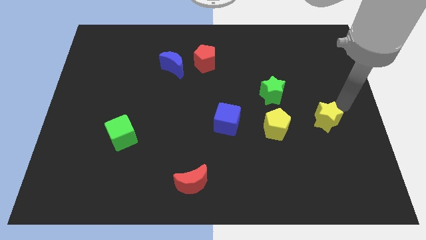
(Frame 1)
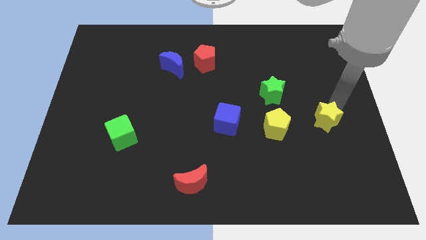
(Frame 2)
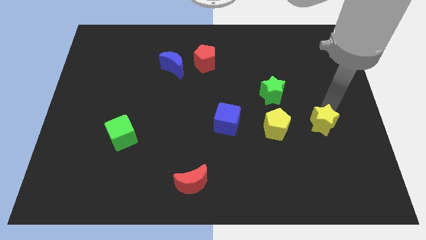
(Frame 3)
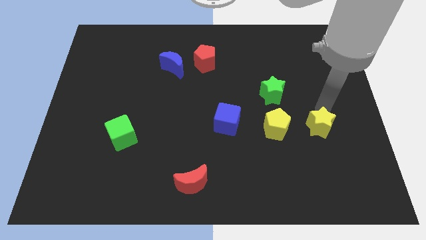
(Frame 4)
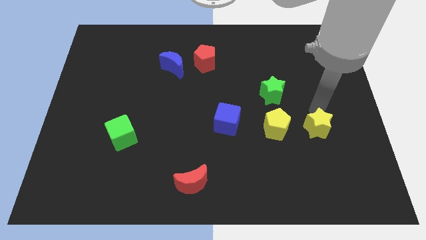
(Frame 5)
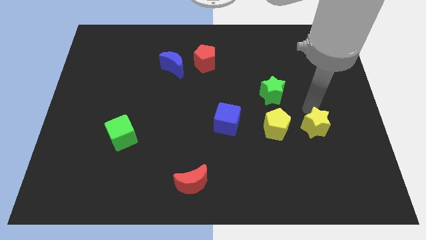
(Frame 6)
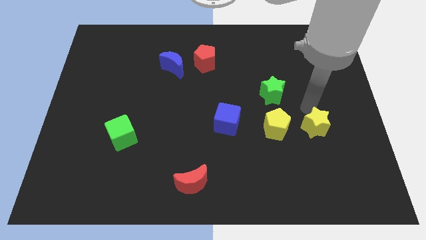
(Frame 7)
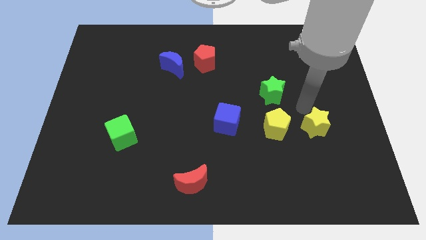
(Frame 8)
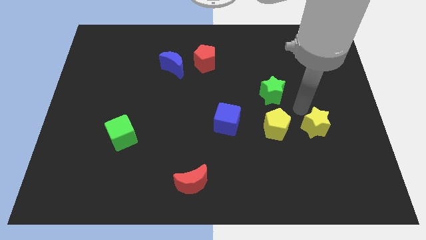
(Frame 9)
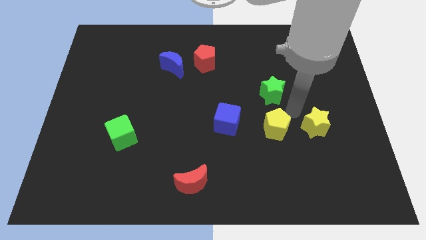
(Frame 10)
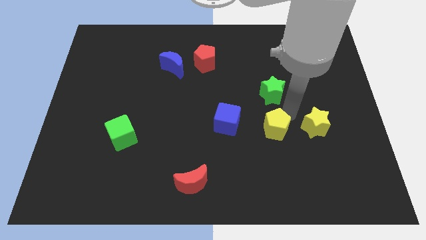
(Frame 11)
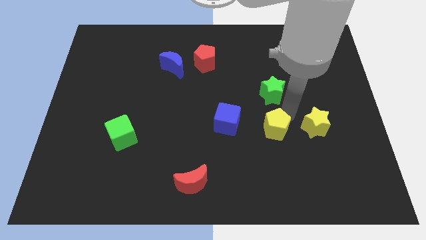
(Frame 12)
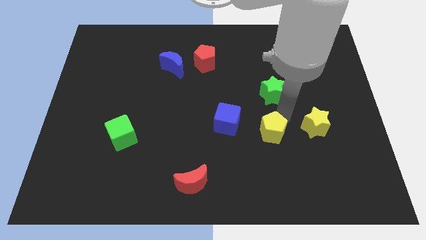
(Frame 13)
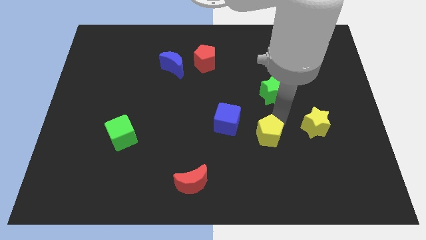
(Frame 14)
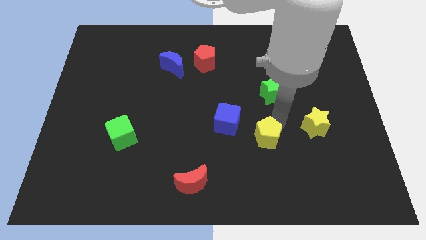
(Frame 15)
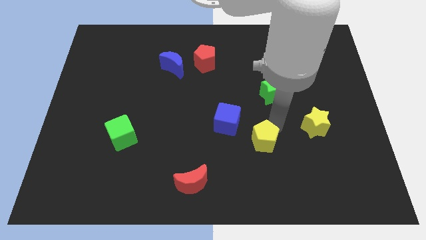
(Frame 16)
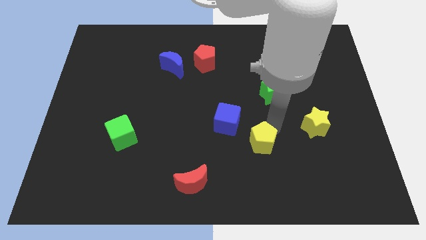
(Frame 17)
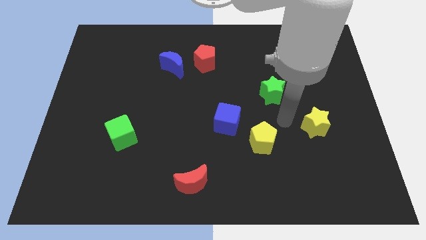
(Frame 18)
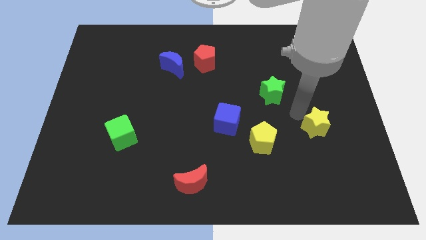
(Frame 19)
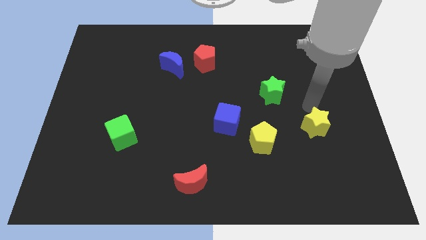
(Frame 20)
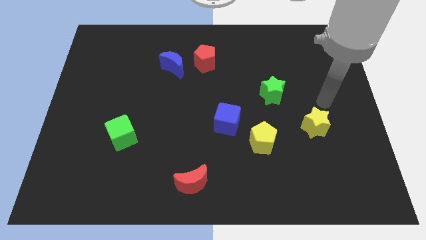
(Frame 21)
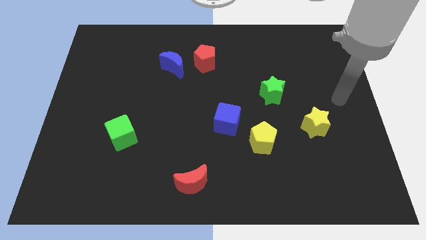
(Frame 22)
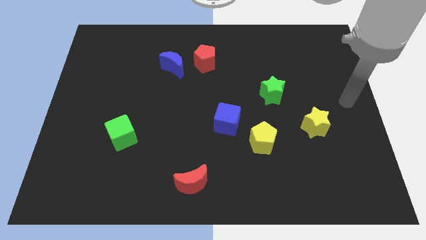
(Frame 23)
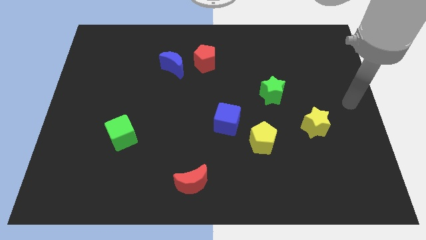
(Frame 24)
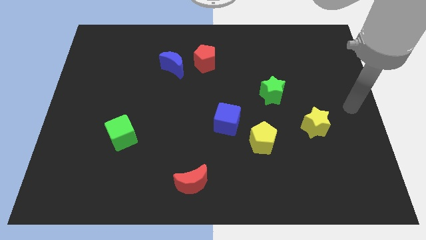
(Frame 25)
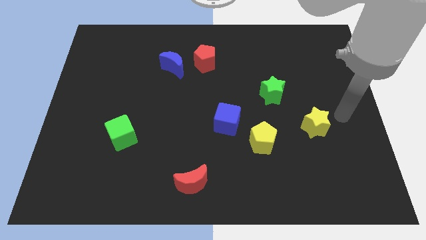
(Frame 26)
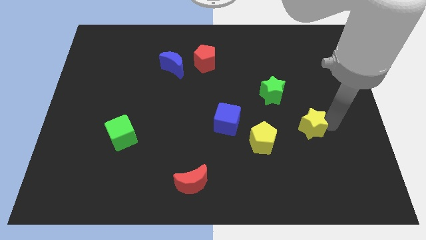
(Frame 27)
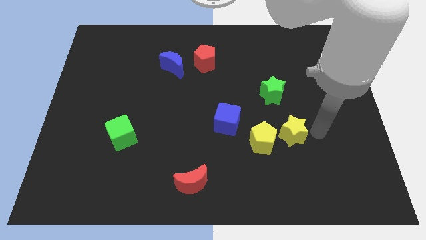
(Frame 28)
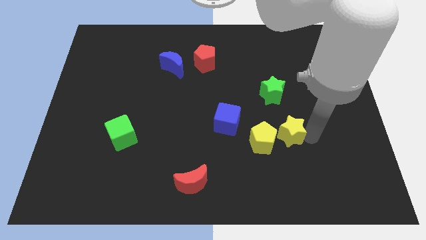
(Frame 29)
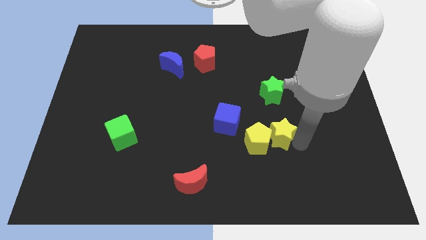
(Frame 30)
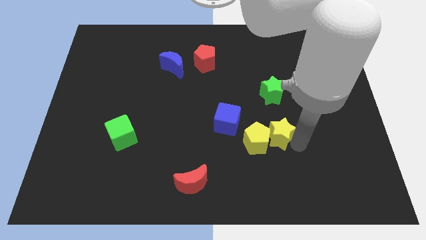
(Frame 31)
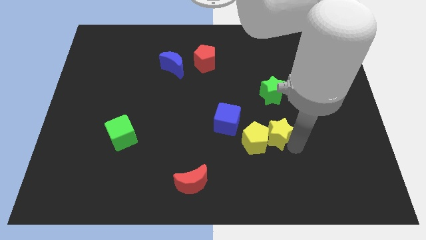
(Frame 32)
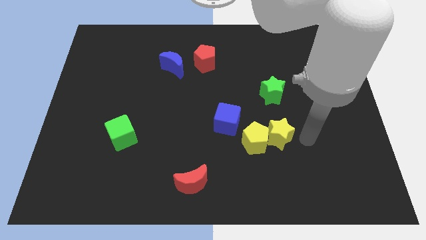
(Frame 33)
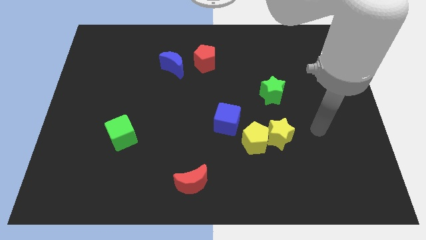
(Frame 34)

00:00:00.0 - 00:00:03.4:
move yellow pentagon with help of yellow star towards the red moon

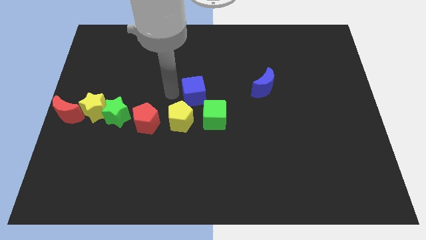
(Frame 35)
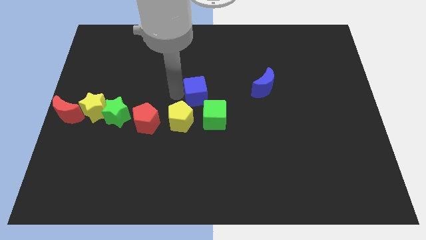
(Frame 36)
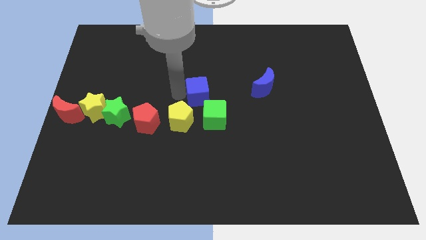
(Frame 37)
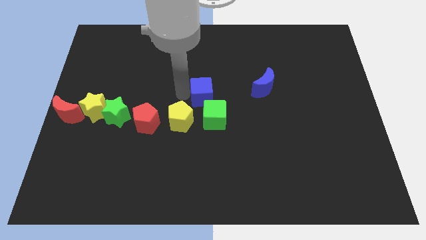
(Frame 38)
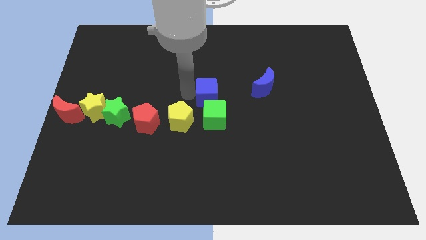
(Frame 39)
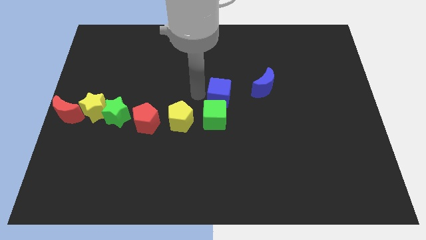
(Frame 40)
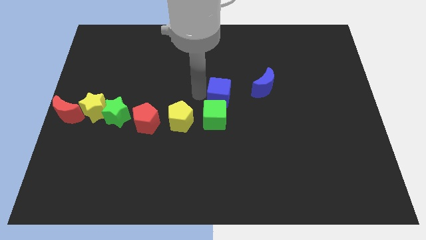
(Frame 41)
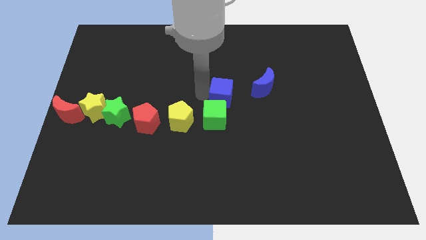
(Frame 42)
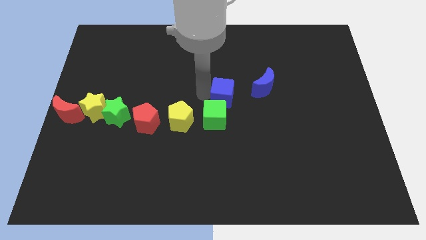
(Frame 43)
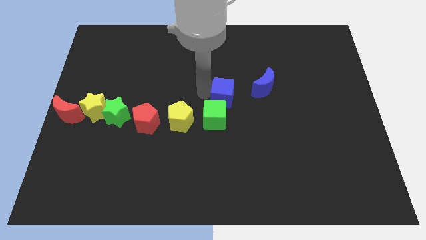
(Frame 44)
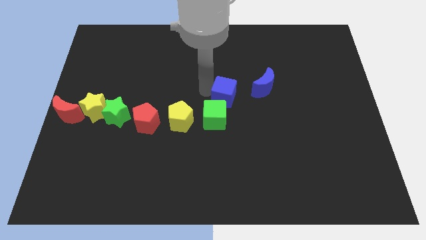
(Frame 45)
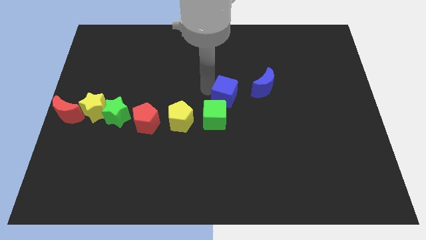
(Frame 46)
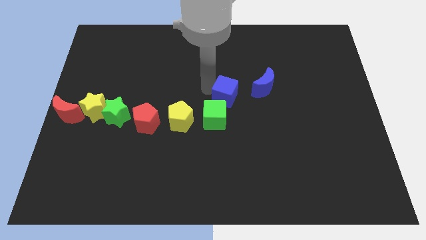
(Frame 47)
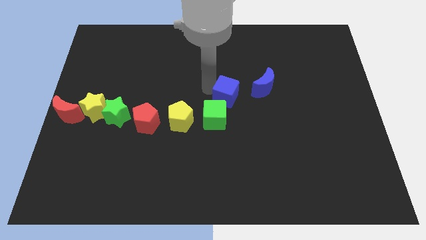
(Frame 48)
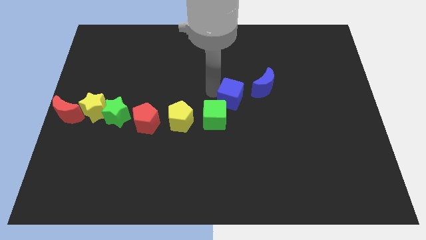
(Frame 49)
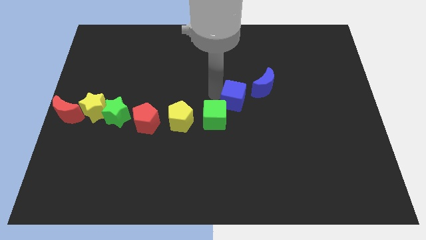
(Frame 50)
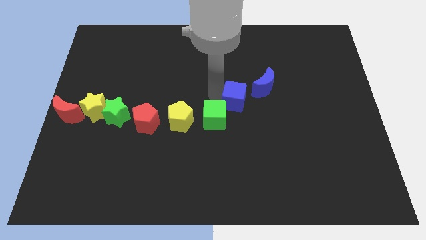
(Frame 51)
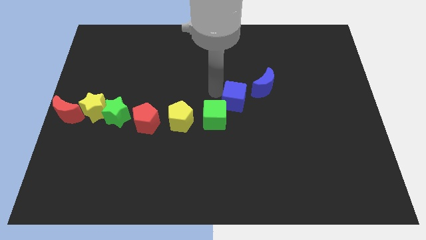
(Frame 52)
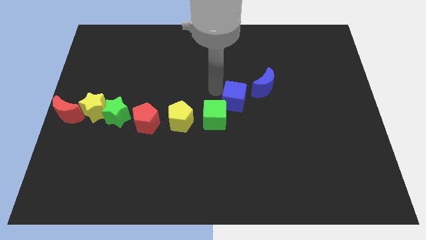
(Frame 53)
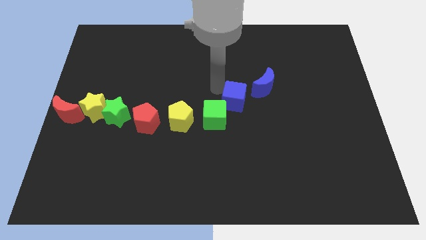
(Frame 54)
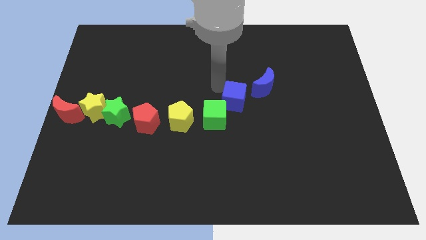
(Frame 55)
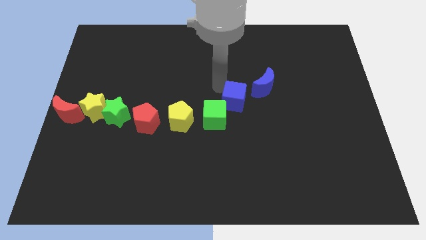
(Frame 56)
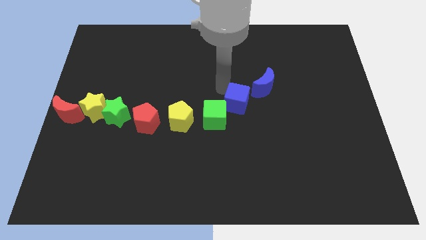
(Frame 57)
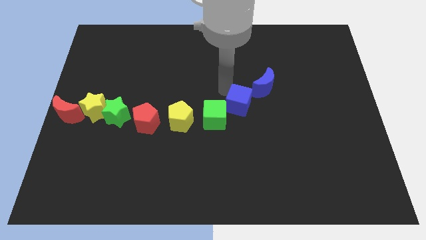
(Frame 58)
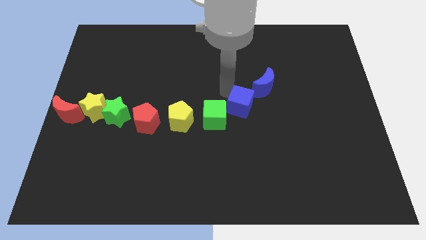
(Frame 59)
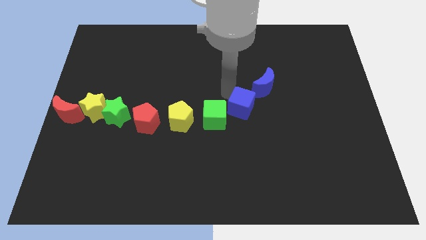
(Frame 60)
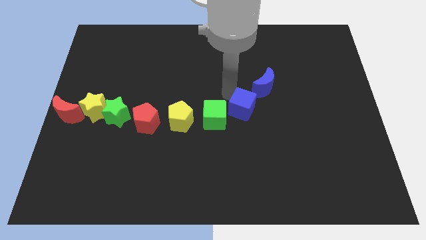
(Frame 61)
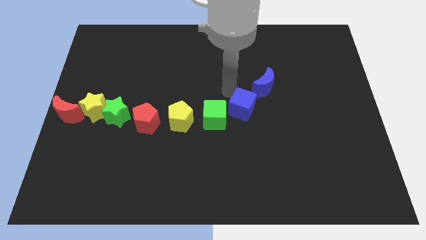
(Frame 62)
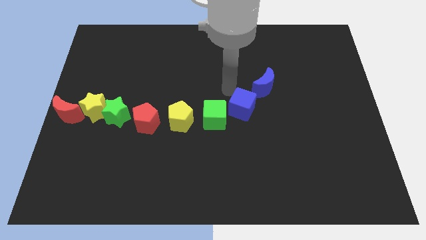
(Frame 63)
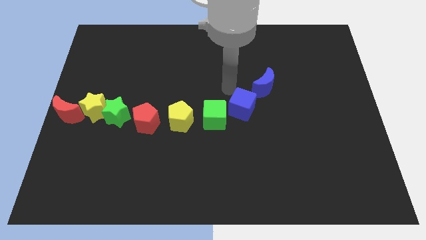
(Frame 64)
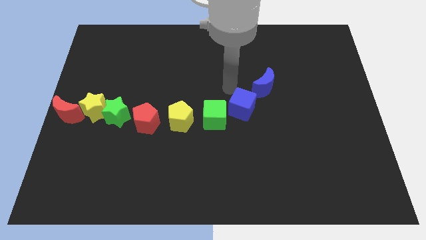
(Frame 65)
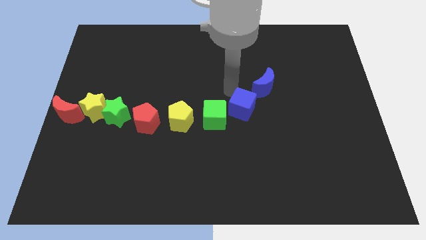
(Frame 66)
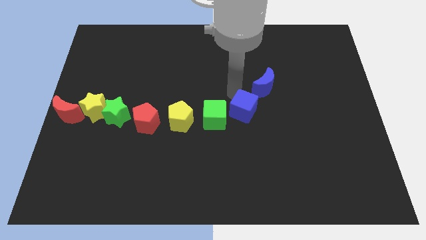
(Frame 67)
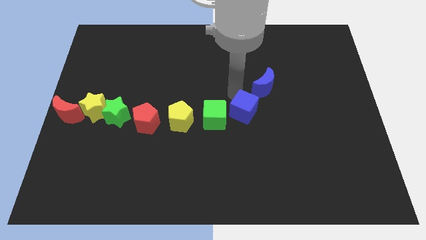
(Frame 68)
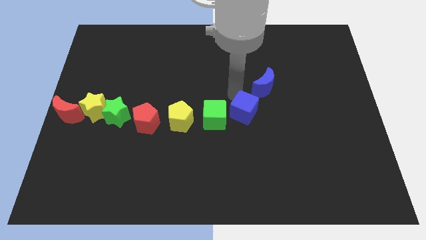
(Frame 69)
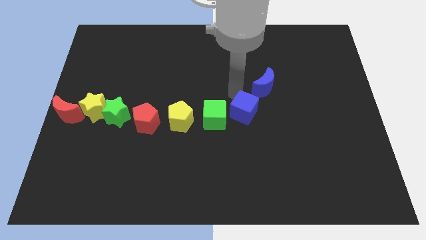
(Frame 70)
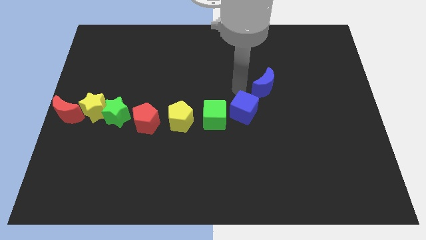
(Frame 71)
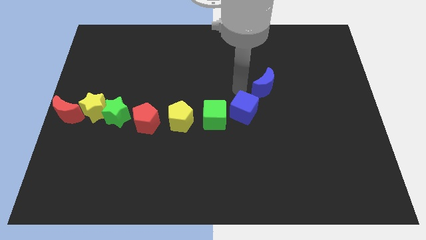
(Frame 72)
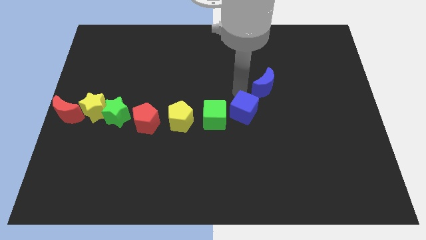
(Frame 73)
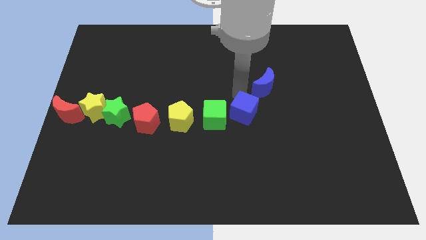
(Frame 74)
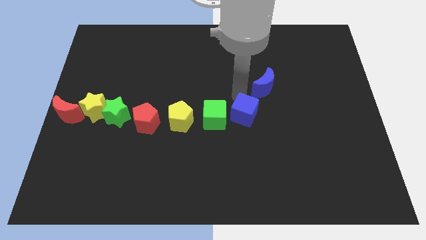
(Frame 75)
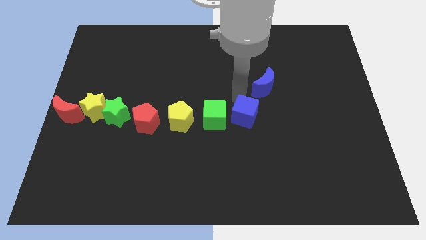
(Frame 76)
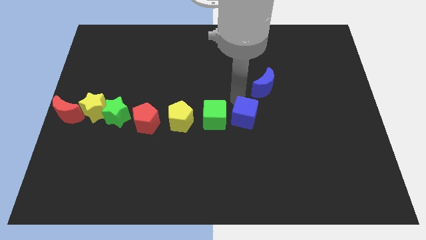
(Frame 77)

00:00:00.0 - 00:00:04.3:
move the blue cube to the right of the green cube

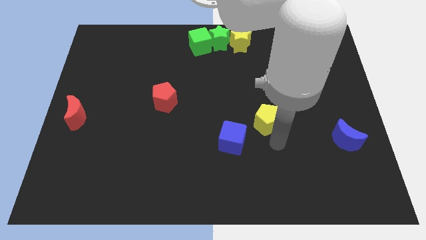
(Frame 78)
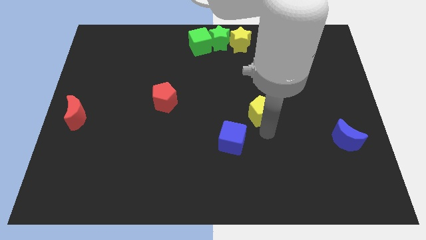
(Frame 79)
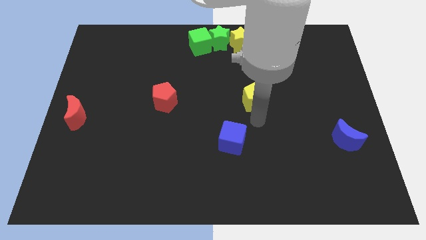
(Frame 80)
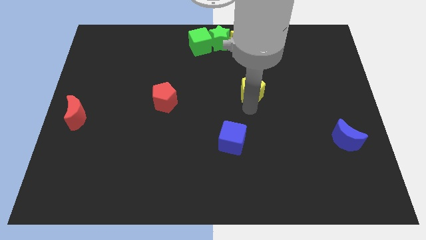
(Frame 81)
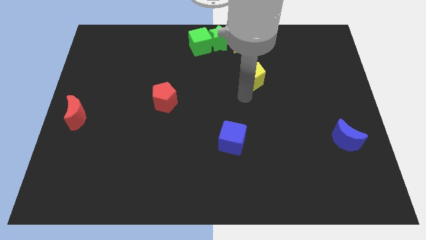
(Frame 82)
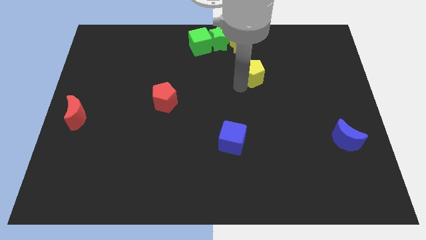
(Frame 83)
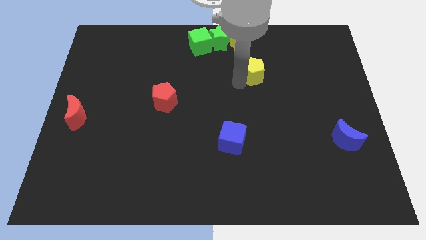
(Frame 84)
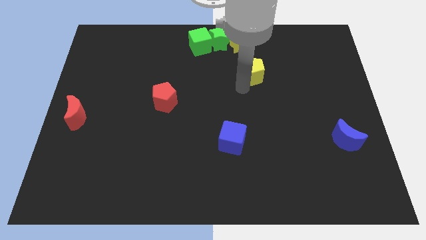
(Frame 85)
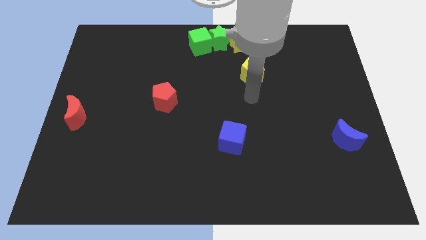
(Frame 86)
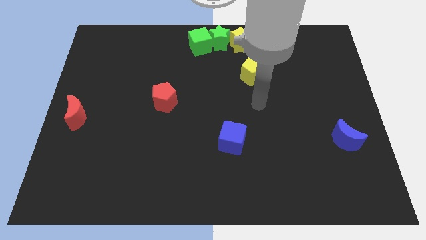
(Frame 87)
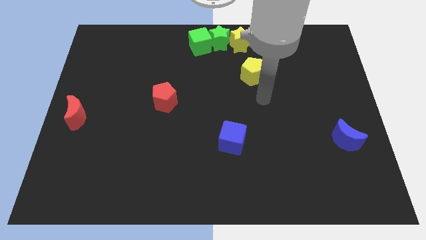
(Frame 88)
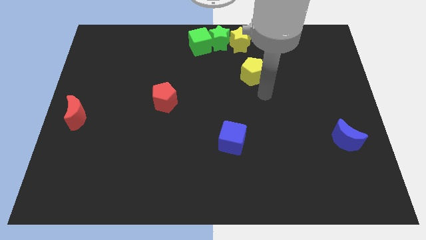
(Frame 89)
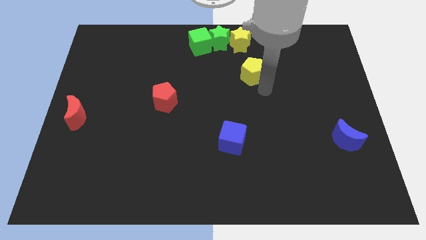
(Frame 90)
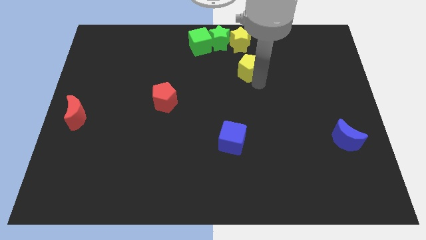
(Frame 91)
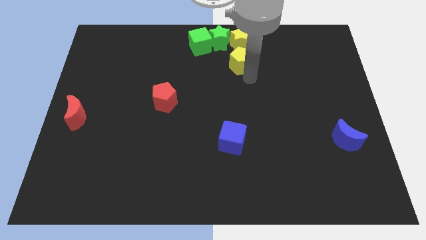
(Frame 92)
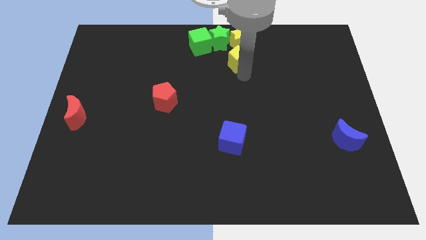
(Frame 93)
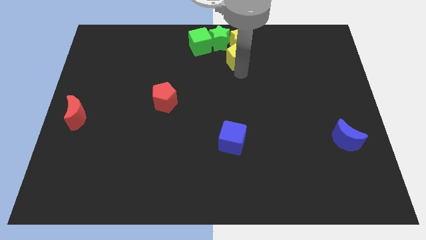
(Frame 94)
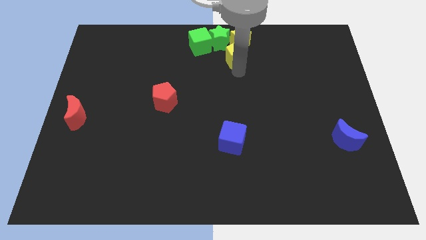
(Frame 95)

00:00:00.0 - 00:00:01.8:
move the yellow pentagon to the bottom of the yellow star
